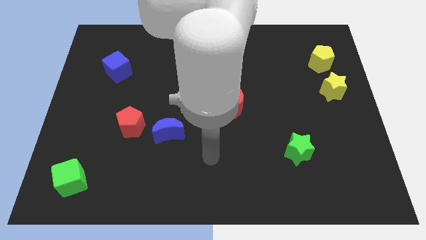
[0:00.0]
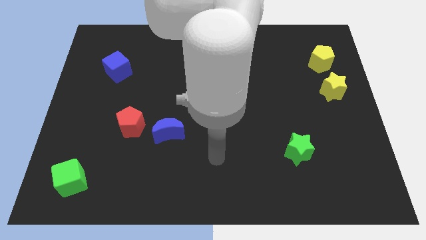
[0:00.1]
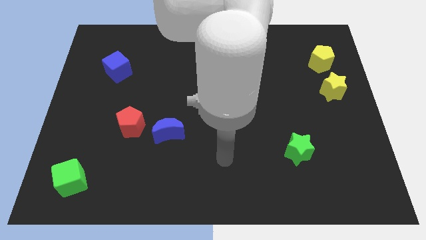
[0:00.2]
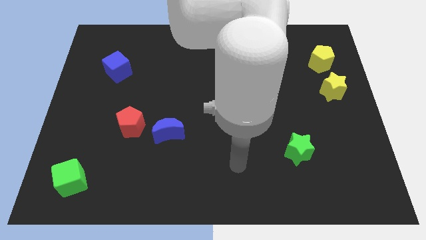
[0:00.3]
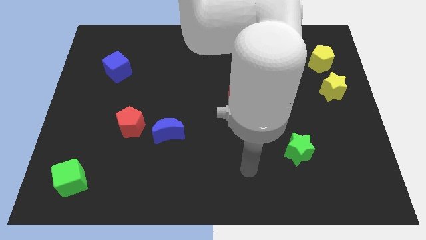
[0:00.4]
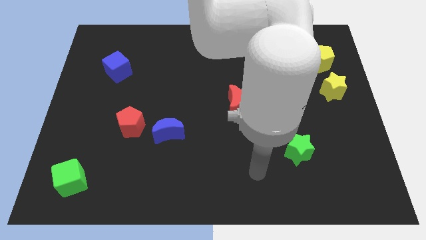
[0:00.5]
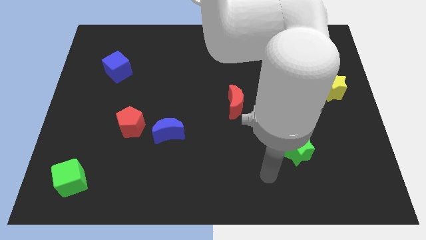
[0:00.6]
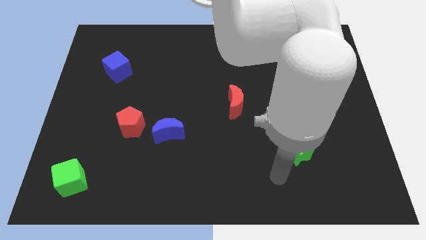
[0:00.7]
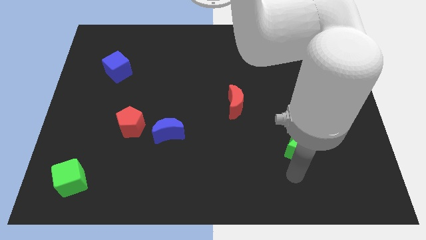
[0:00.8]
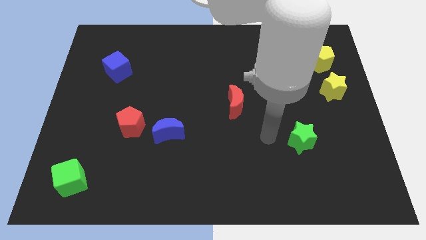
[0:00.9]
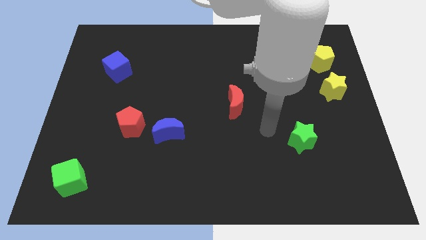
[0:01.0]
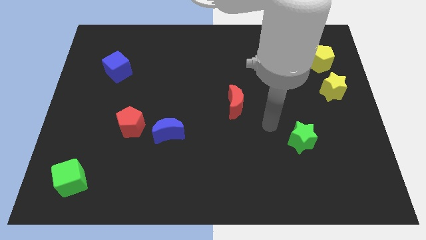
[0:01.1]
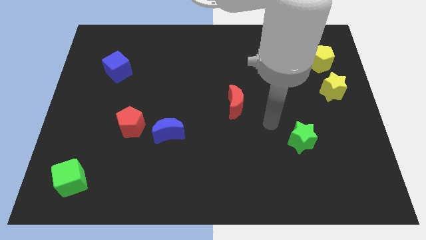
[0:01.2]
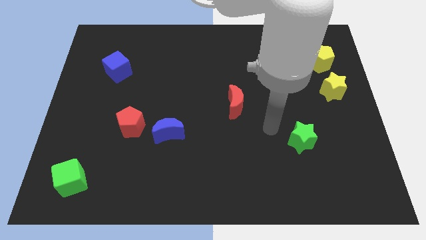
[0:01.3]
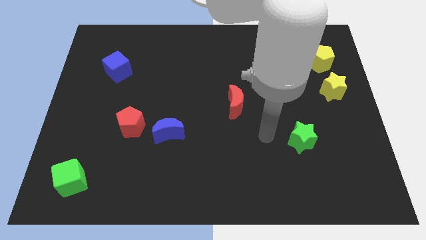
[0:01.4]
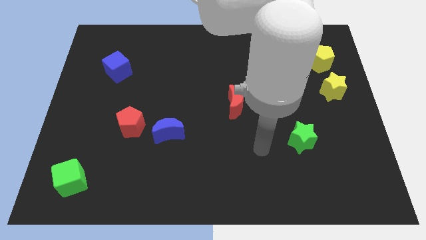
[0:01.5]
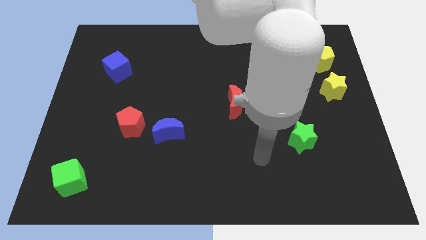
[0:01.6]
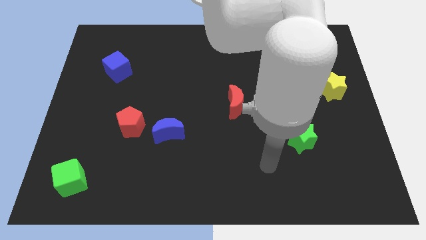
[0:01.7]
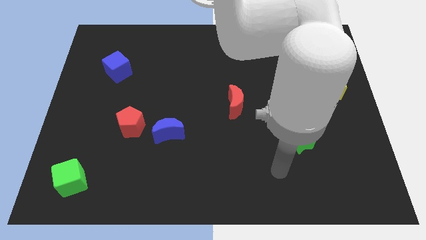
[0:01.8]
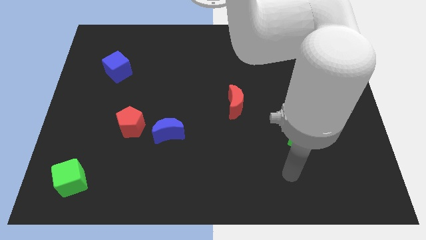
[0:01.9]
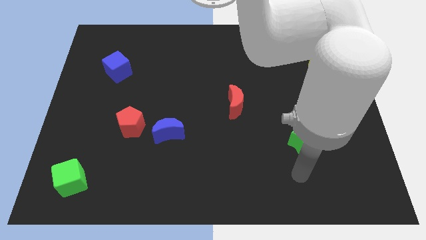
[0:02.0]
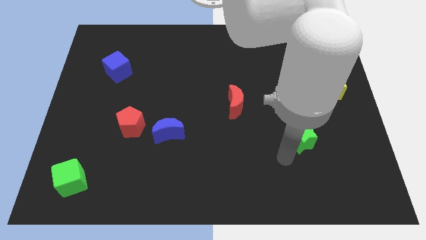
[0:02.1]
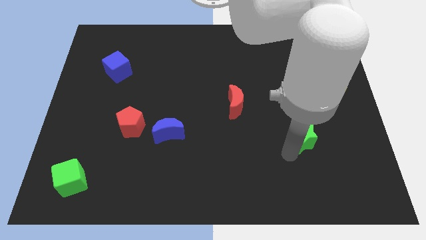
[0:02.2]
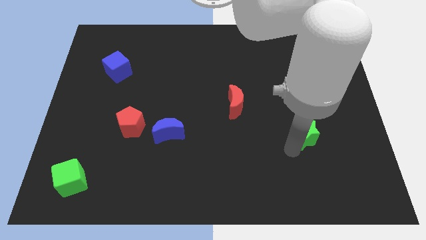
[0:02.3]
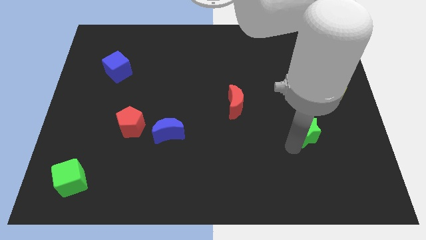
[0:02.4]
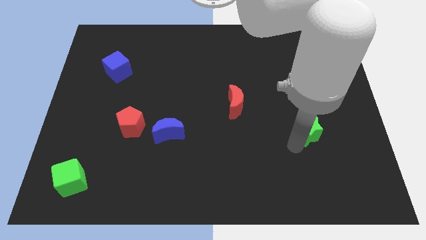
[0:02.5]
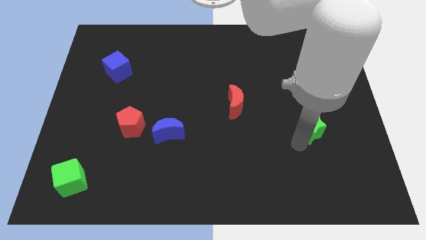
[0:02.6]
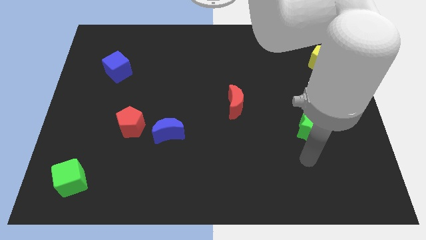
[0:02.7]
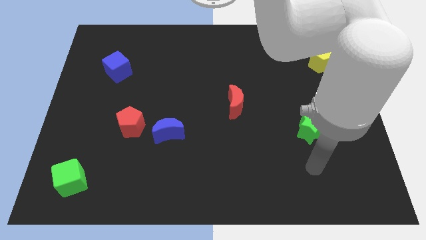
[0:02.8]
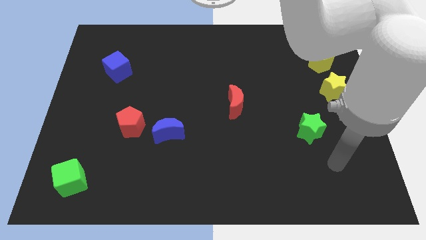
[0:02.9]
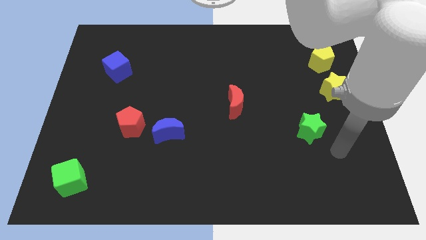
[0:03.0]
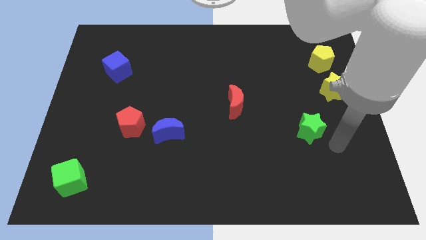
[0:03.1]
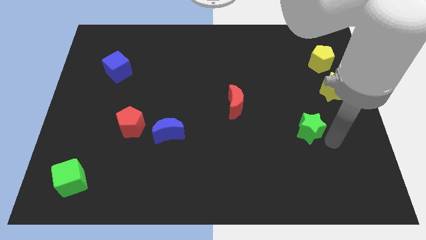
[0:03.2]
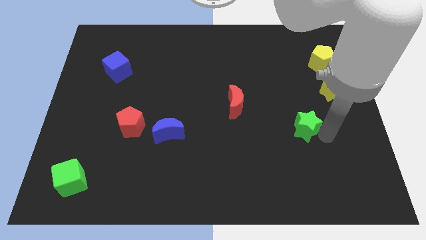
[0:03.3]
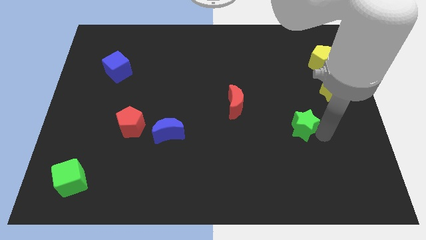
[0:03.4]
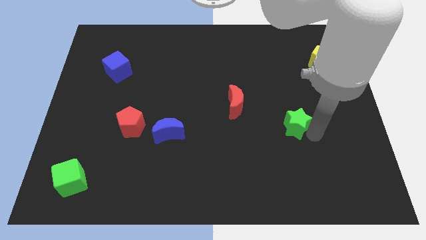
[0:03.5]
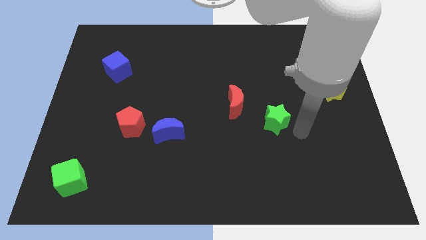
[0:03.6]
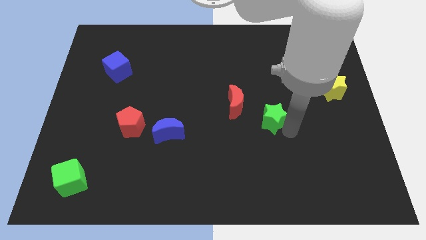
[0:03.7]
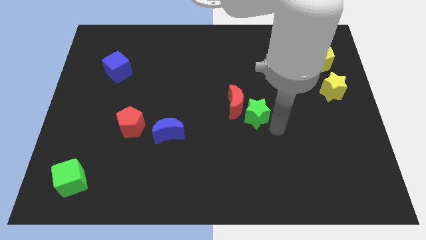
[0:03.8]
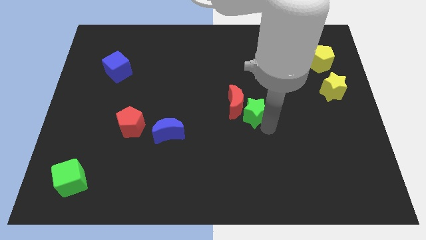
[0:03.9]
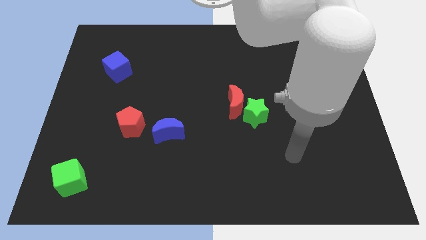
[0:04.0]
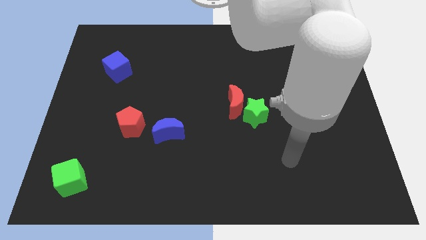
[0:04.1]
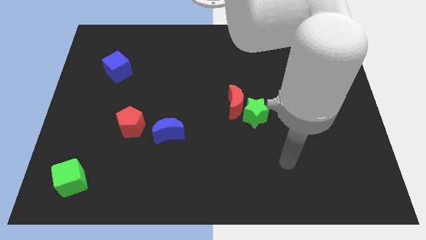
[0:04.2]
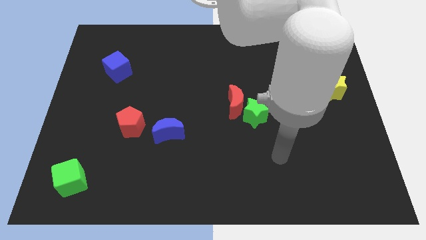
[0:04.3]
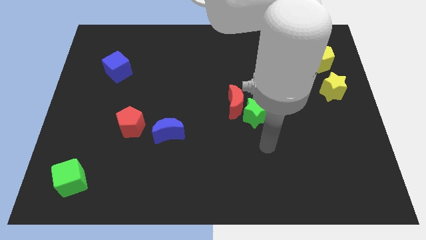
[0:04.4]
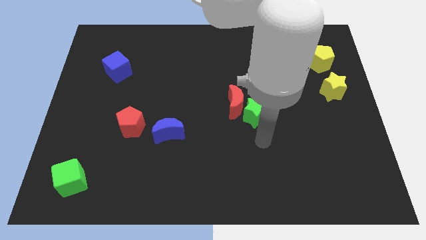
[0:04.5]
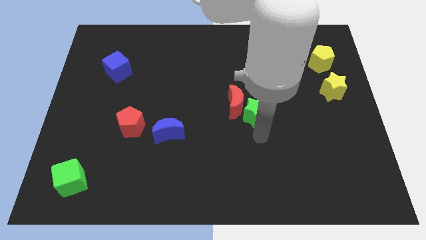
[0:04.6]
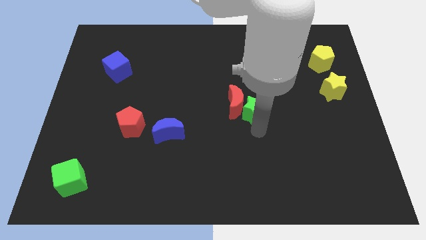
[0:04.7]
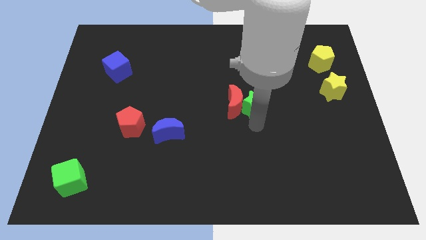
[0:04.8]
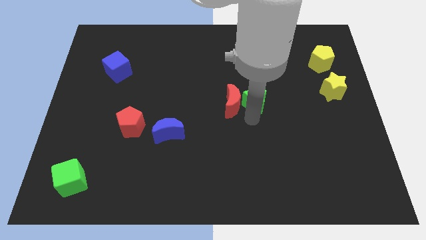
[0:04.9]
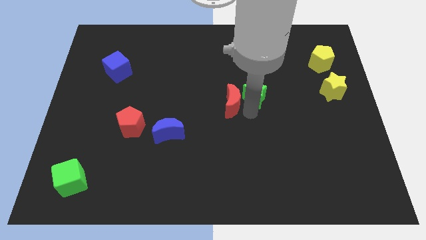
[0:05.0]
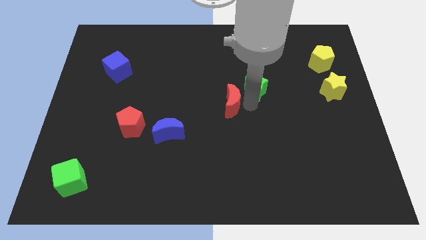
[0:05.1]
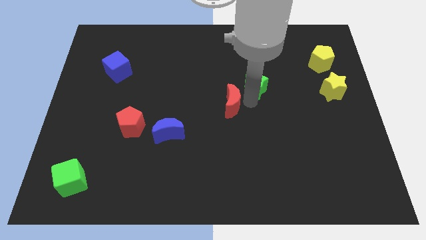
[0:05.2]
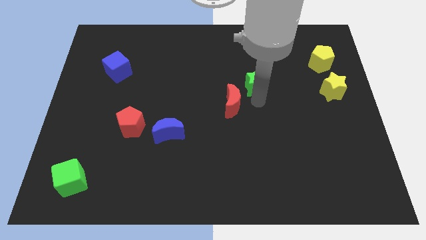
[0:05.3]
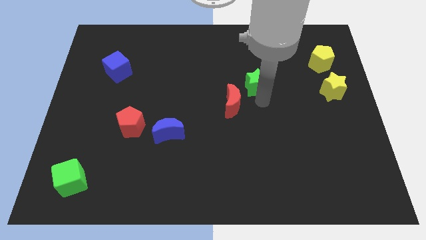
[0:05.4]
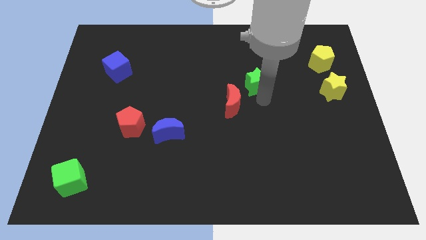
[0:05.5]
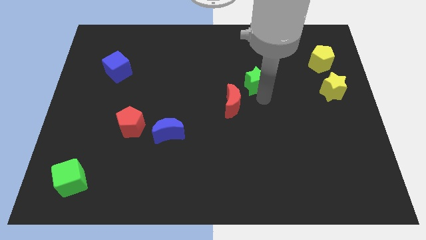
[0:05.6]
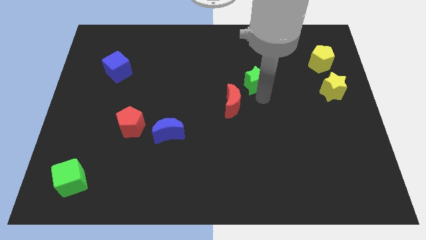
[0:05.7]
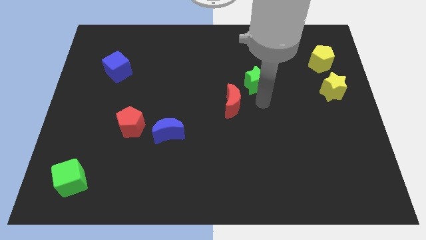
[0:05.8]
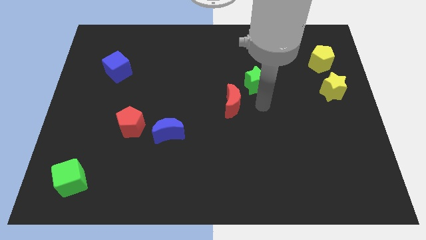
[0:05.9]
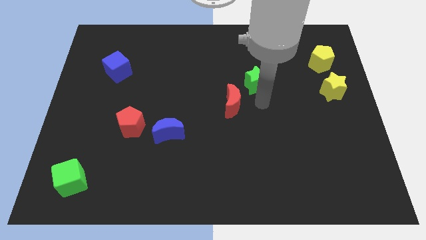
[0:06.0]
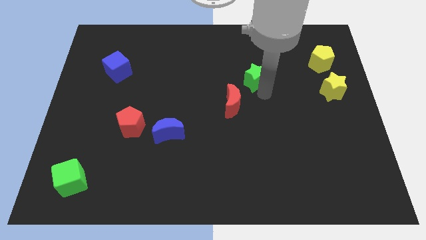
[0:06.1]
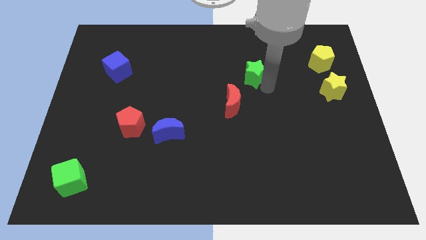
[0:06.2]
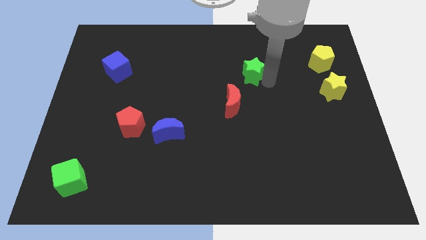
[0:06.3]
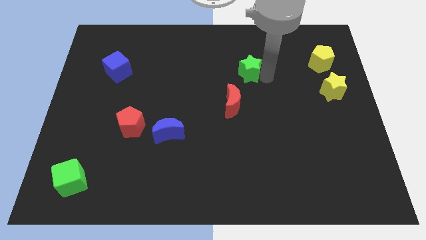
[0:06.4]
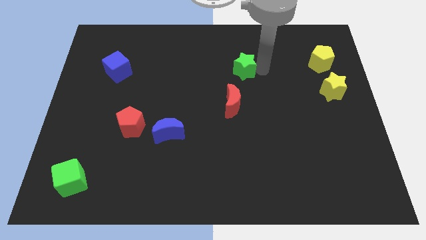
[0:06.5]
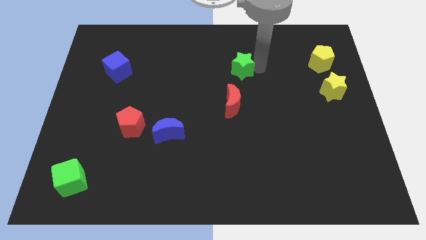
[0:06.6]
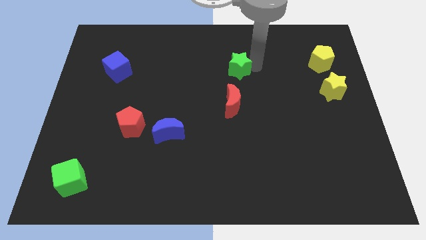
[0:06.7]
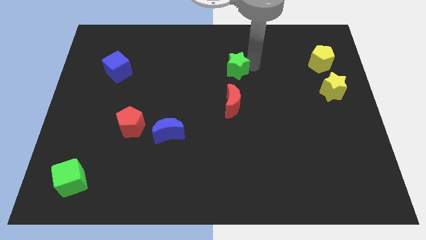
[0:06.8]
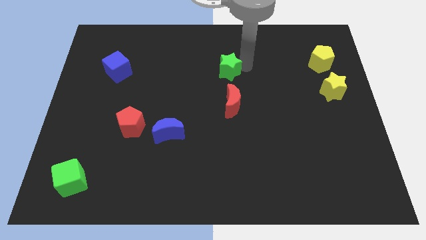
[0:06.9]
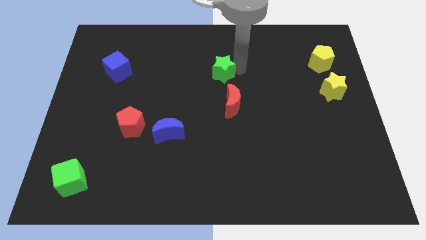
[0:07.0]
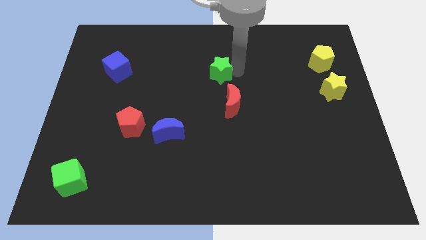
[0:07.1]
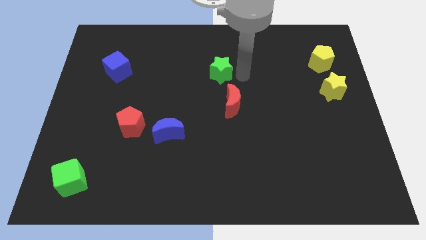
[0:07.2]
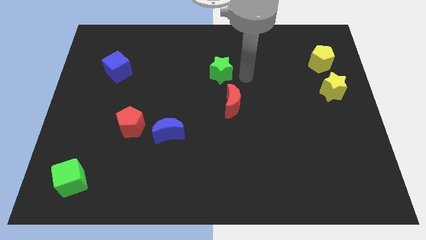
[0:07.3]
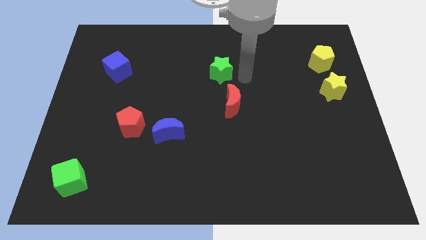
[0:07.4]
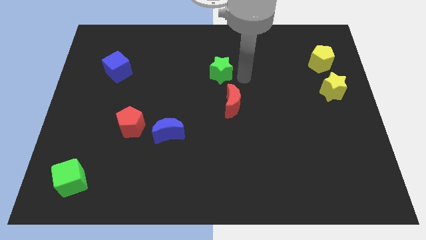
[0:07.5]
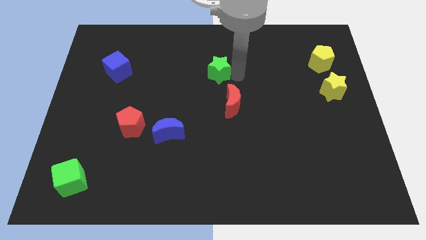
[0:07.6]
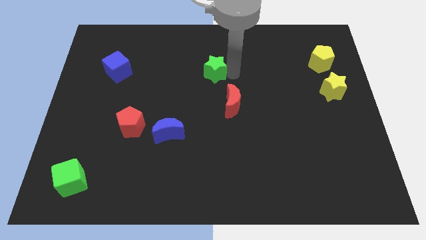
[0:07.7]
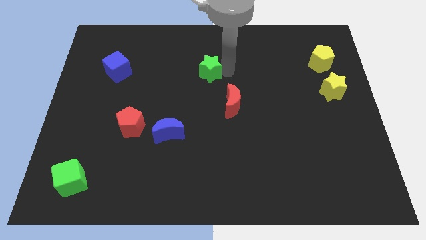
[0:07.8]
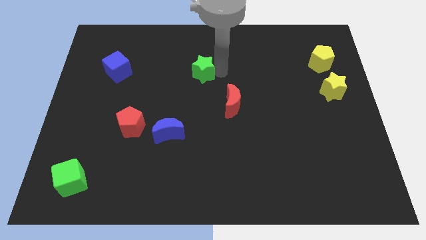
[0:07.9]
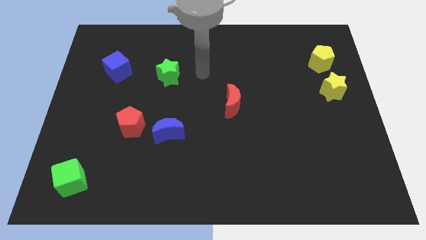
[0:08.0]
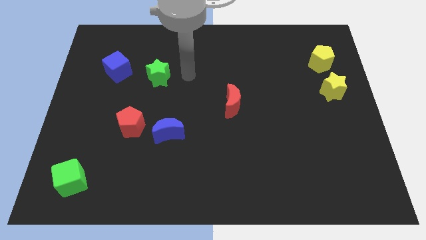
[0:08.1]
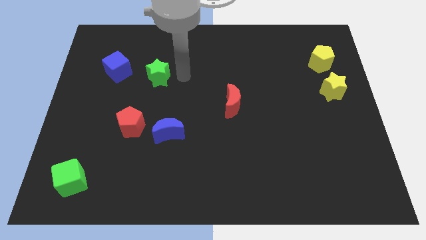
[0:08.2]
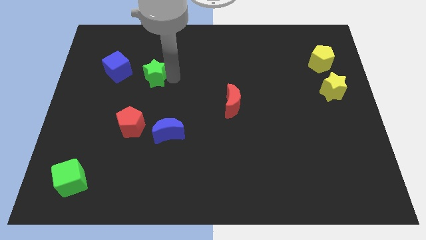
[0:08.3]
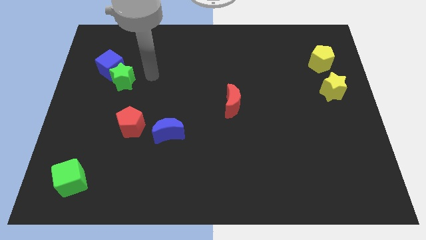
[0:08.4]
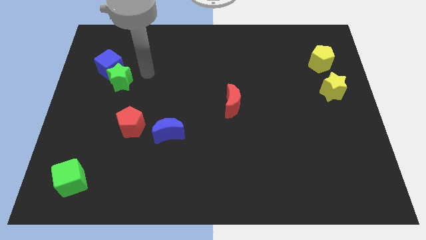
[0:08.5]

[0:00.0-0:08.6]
slide the green star to the blue cube
